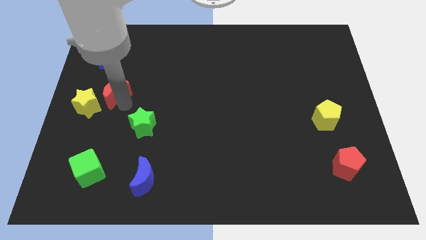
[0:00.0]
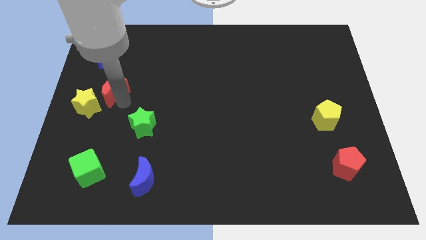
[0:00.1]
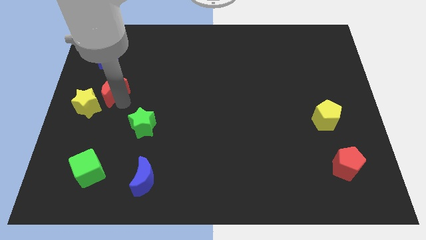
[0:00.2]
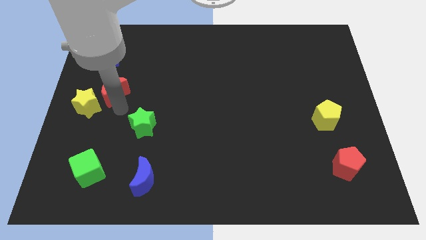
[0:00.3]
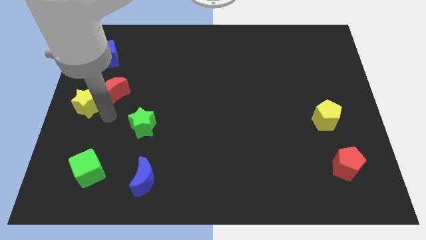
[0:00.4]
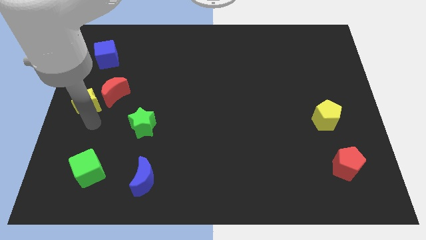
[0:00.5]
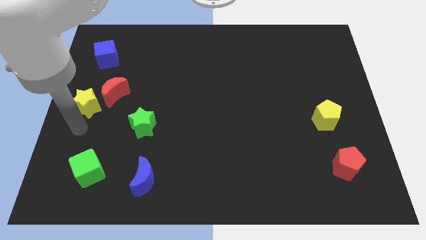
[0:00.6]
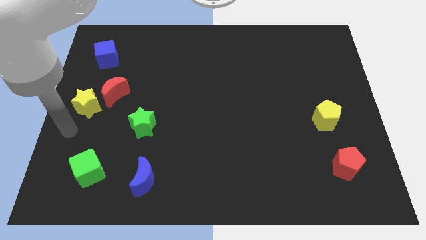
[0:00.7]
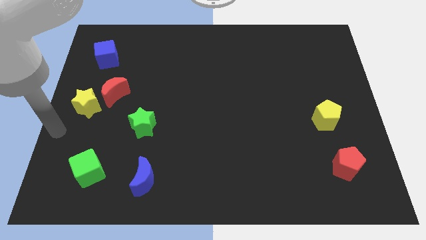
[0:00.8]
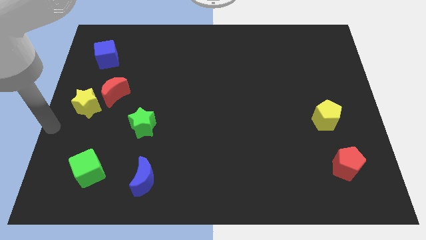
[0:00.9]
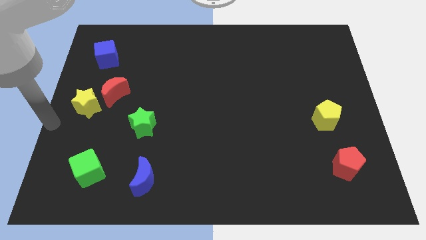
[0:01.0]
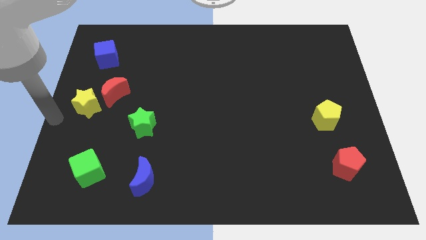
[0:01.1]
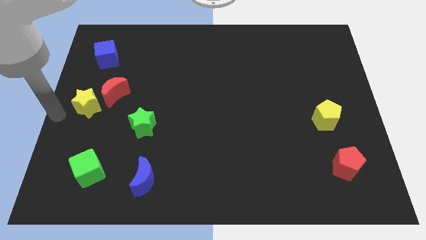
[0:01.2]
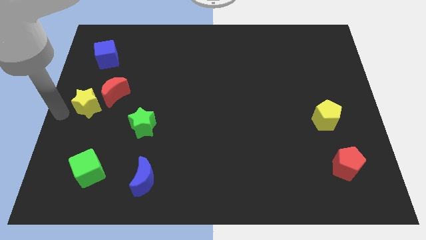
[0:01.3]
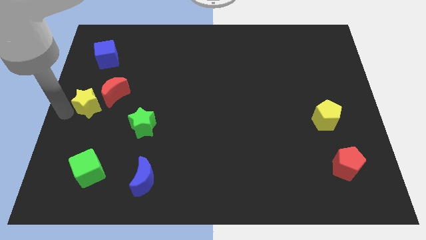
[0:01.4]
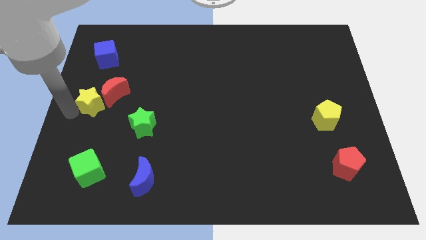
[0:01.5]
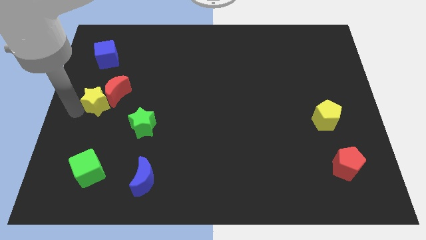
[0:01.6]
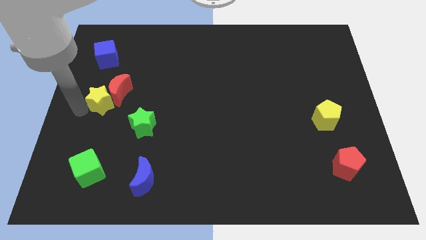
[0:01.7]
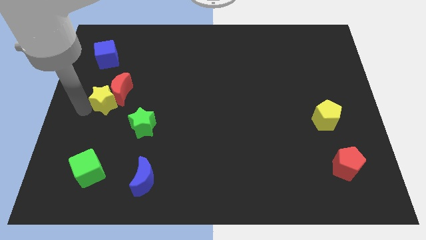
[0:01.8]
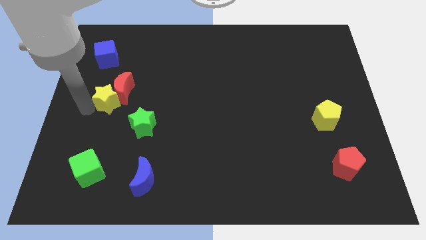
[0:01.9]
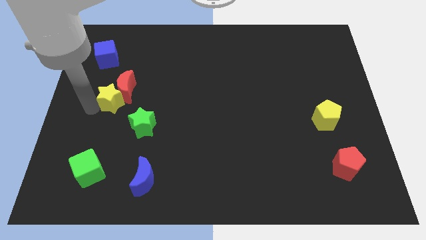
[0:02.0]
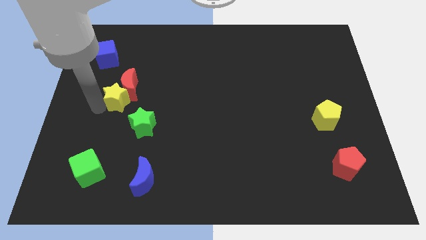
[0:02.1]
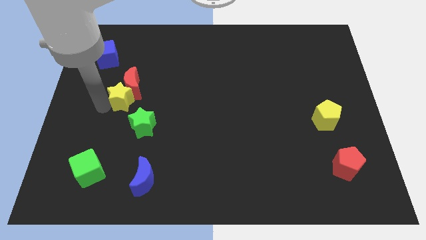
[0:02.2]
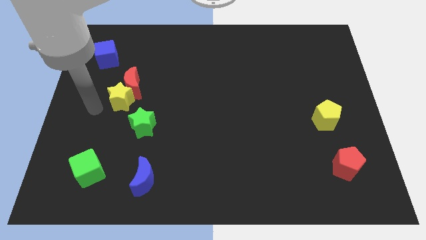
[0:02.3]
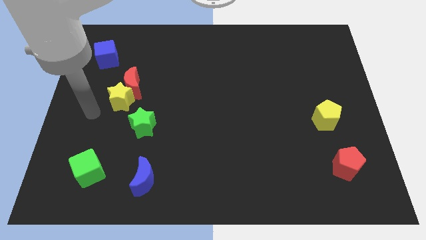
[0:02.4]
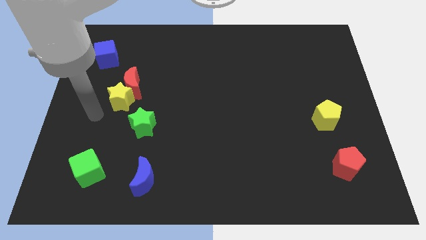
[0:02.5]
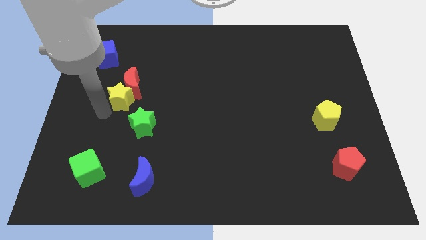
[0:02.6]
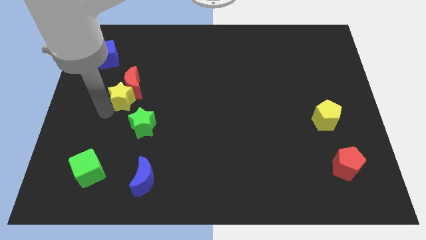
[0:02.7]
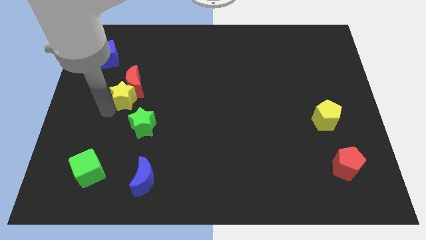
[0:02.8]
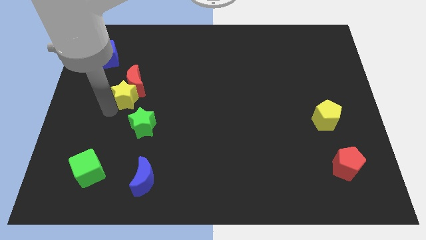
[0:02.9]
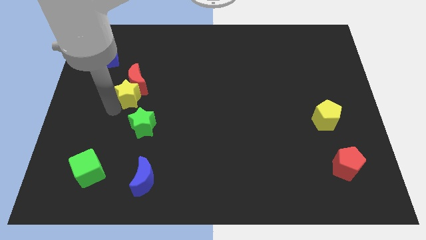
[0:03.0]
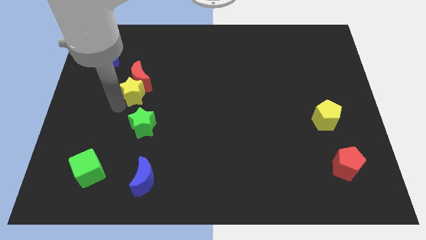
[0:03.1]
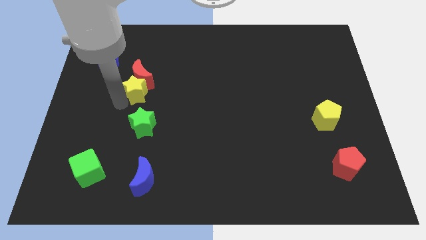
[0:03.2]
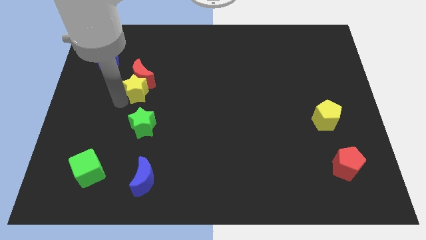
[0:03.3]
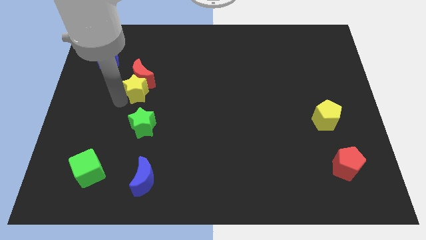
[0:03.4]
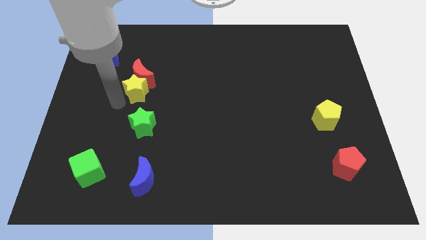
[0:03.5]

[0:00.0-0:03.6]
push the yellow star into the red moon

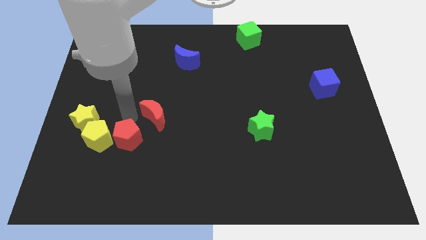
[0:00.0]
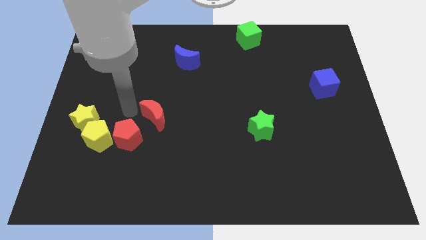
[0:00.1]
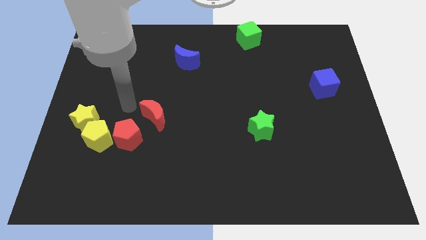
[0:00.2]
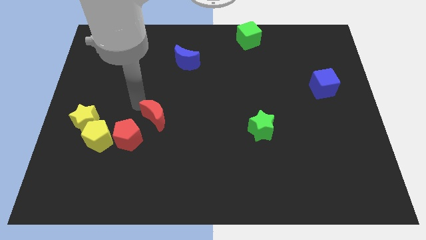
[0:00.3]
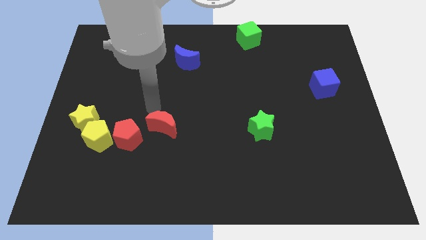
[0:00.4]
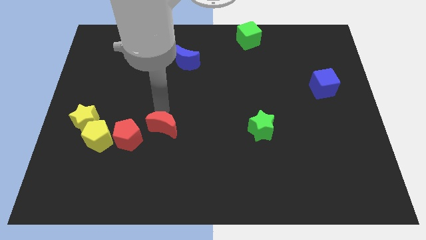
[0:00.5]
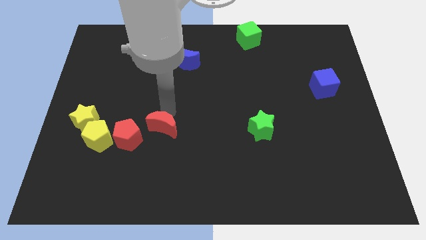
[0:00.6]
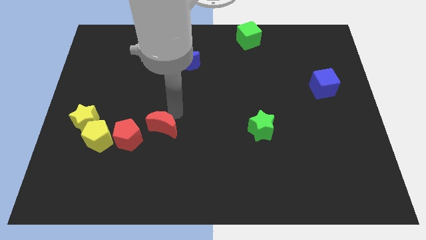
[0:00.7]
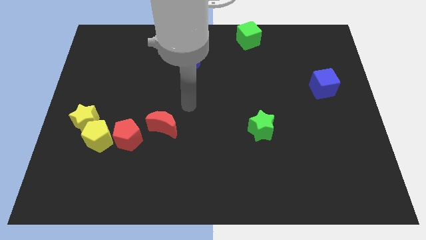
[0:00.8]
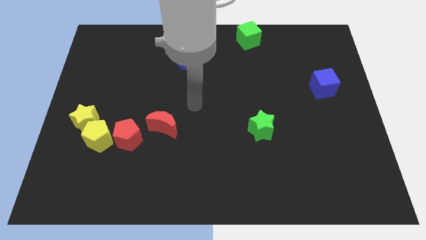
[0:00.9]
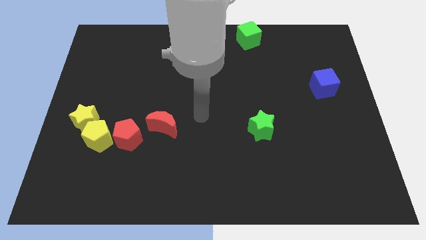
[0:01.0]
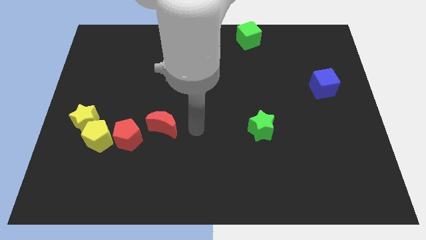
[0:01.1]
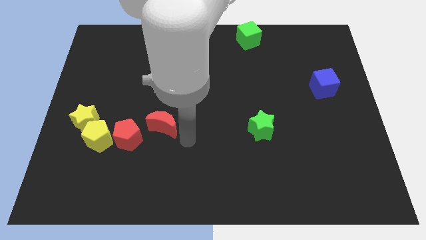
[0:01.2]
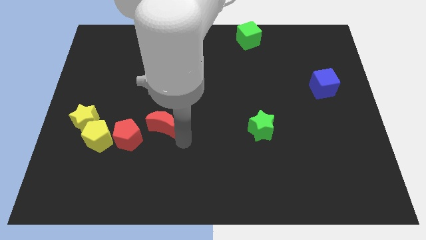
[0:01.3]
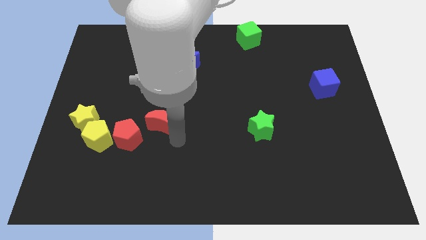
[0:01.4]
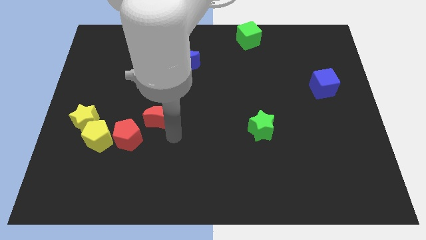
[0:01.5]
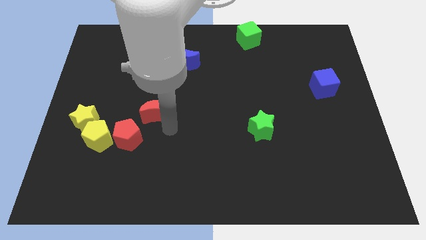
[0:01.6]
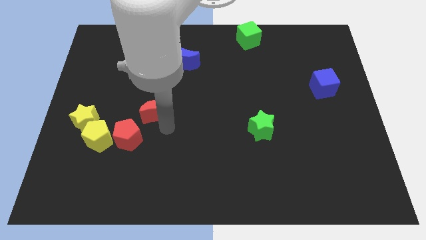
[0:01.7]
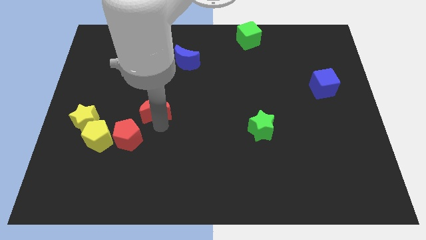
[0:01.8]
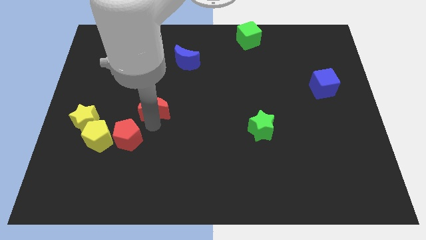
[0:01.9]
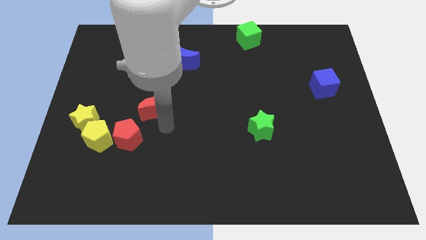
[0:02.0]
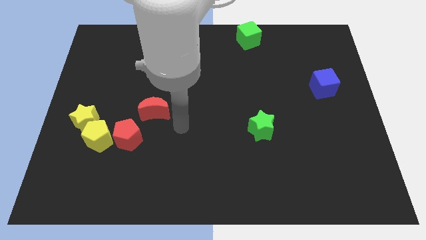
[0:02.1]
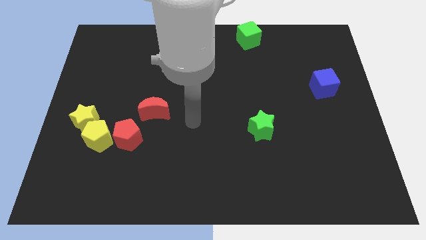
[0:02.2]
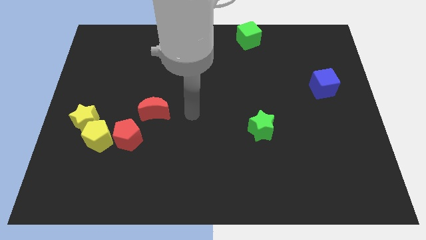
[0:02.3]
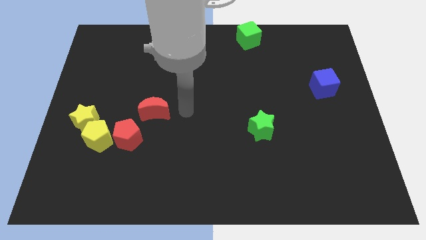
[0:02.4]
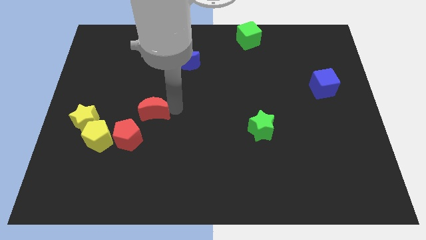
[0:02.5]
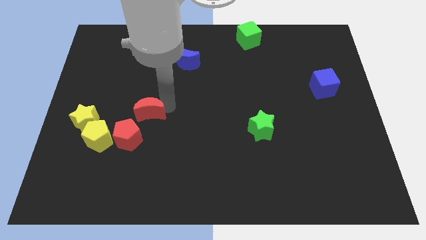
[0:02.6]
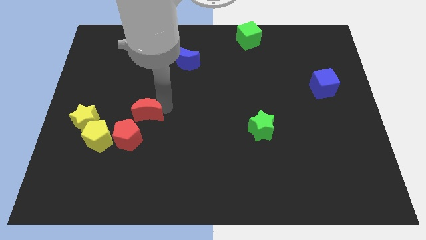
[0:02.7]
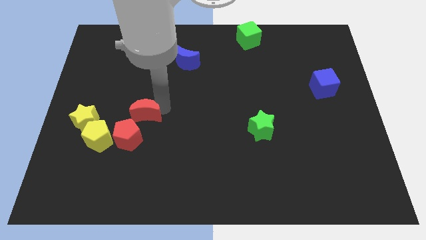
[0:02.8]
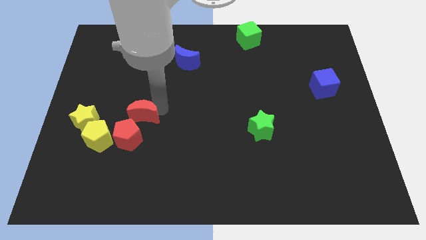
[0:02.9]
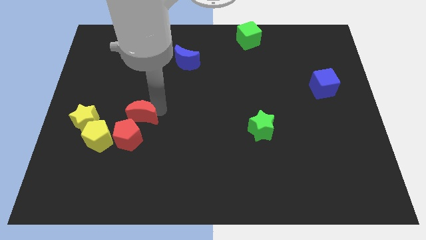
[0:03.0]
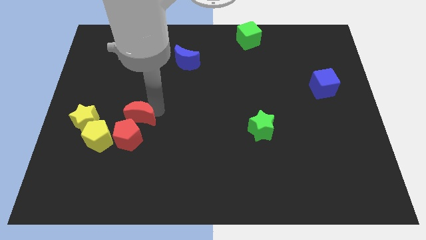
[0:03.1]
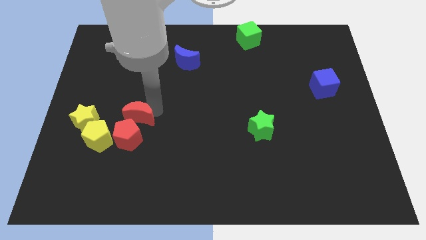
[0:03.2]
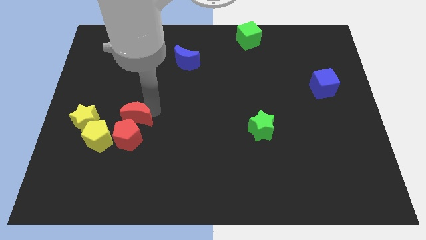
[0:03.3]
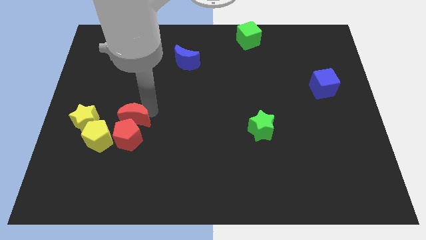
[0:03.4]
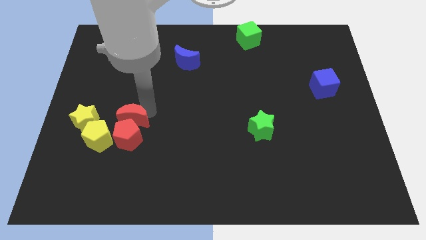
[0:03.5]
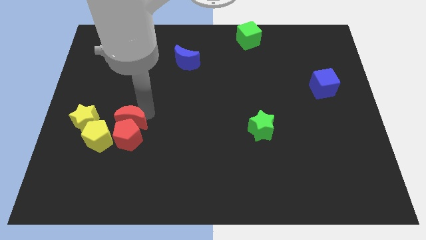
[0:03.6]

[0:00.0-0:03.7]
place the red crescent on the top of the red pentagon

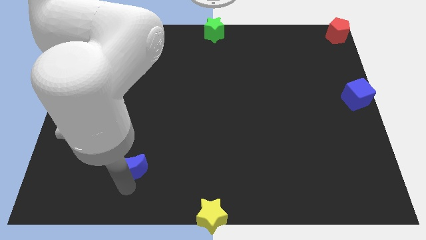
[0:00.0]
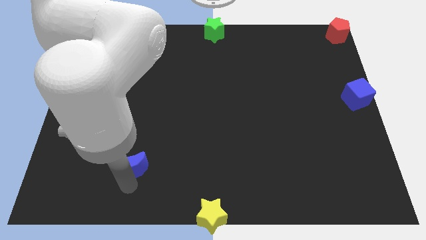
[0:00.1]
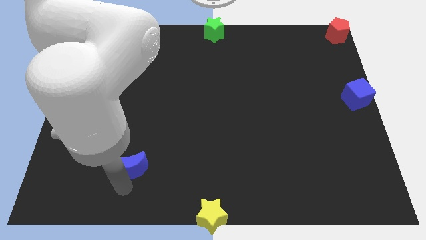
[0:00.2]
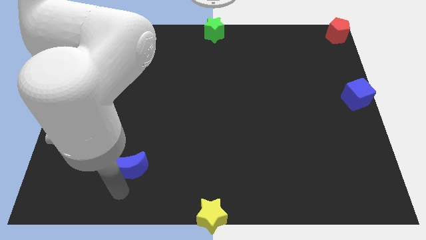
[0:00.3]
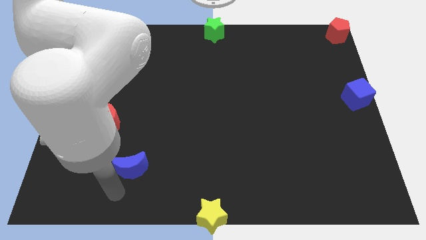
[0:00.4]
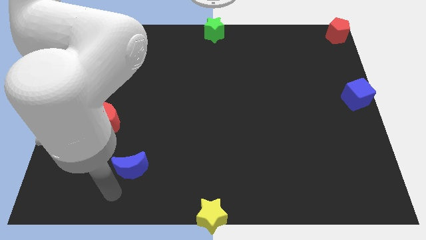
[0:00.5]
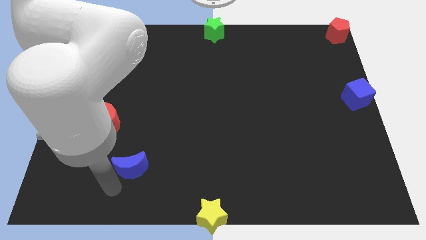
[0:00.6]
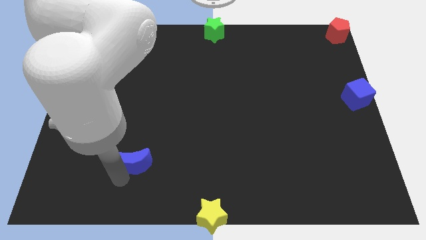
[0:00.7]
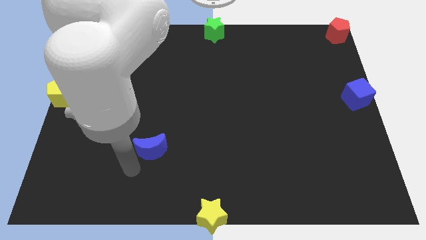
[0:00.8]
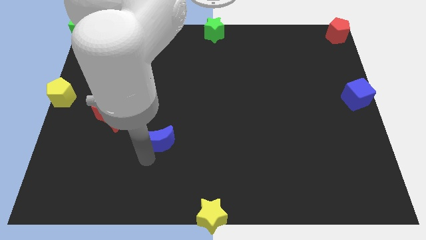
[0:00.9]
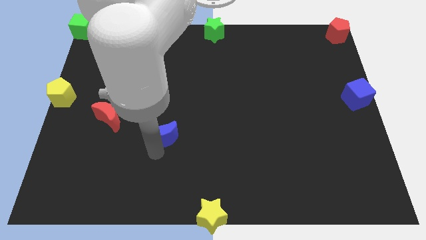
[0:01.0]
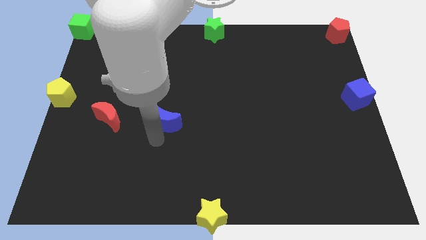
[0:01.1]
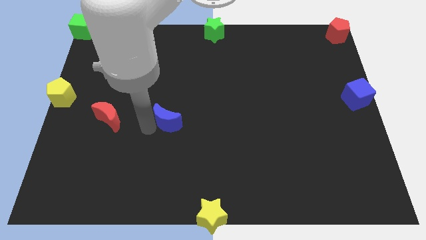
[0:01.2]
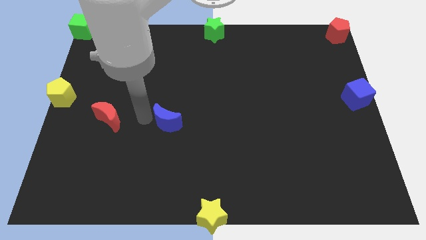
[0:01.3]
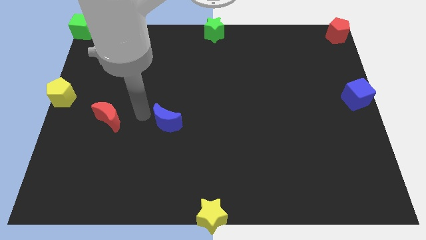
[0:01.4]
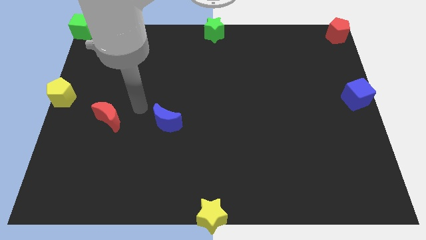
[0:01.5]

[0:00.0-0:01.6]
move the blue crescent to the right of red moon
